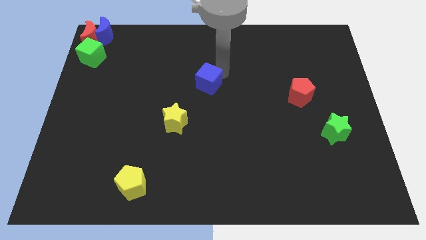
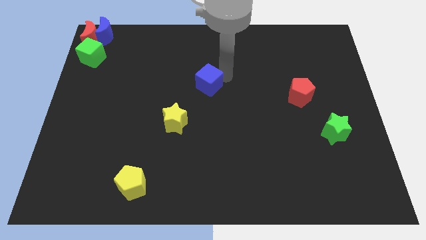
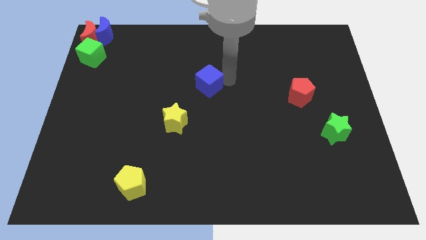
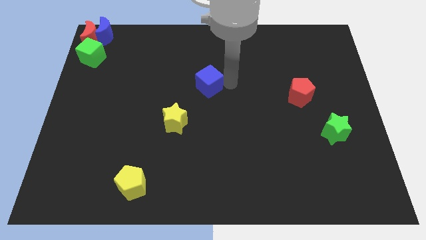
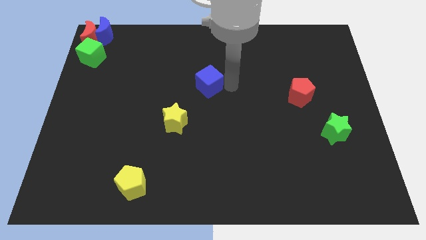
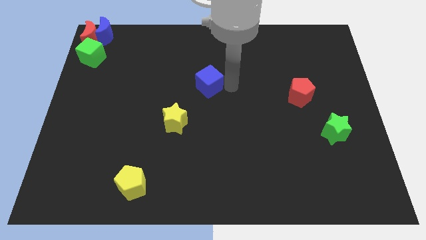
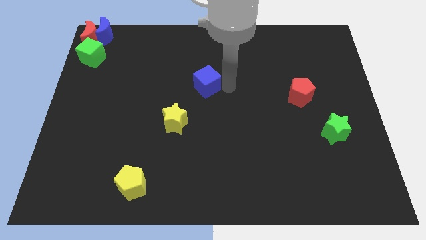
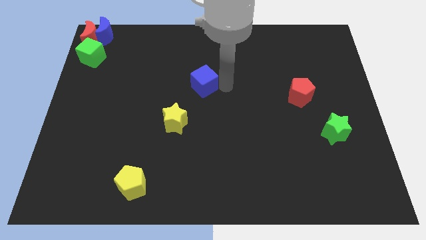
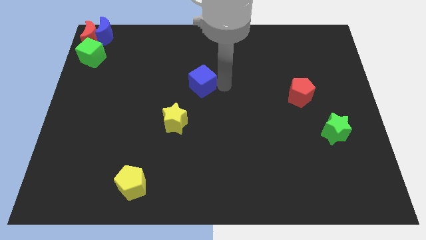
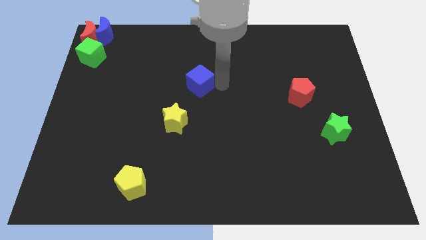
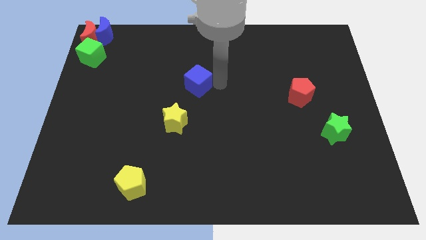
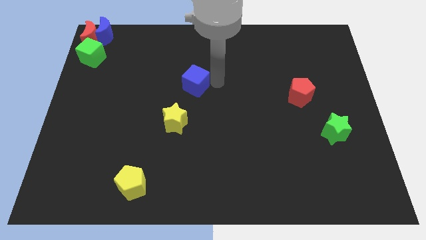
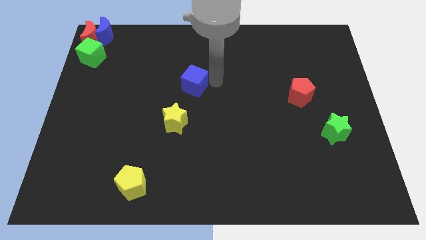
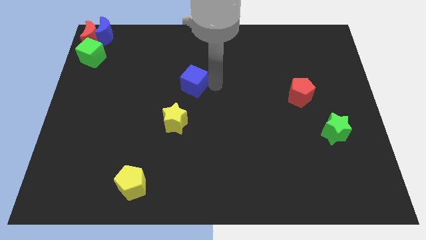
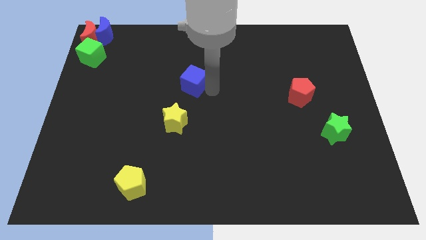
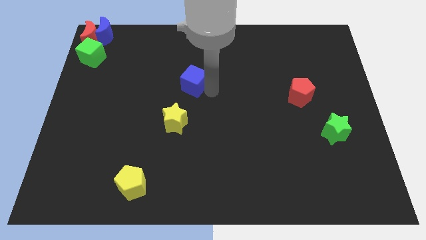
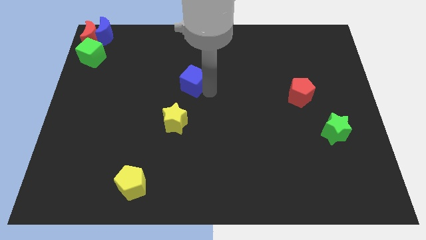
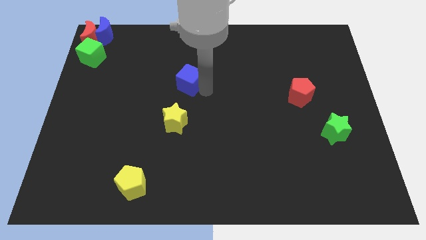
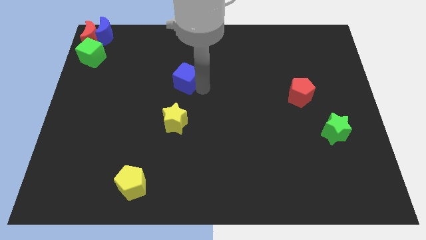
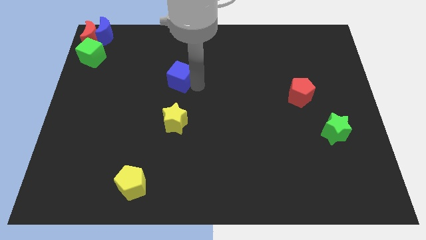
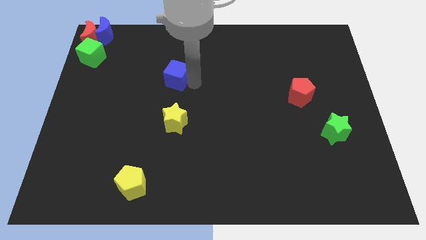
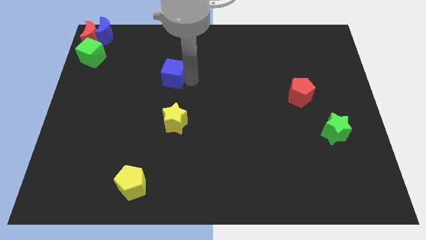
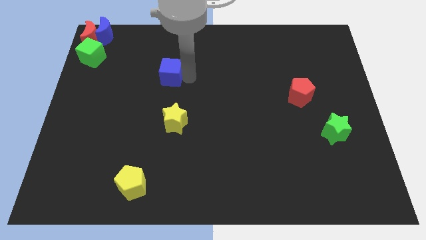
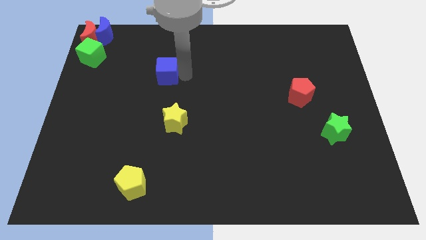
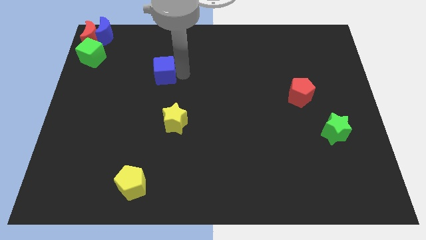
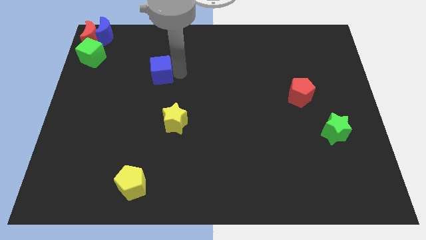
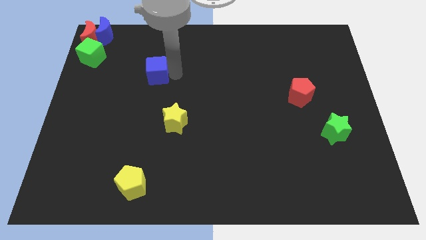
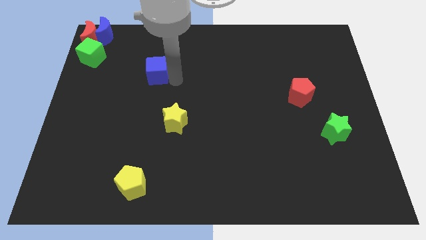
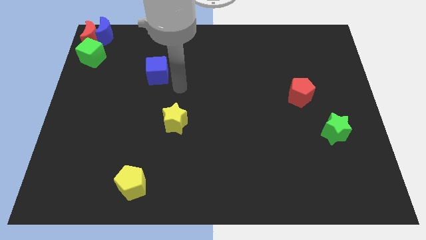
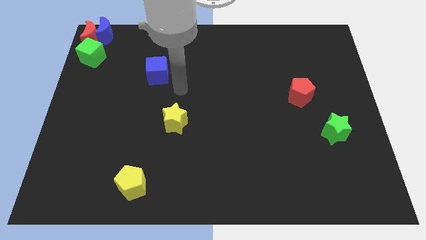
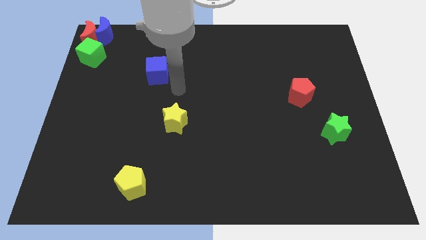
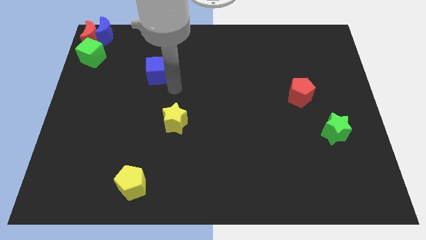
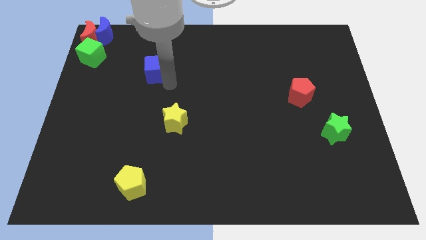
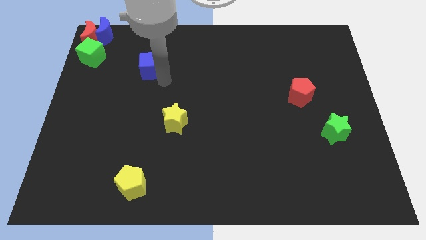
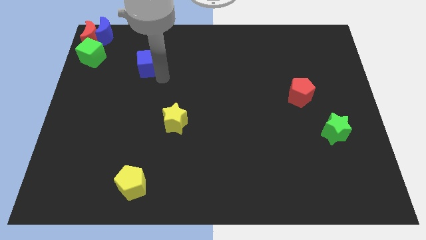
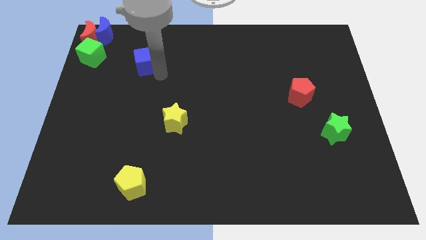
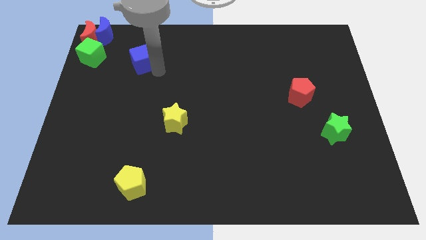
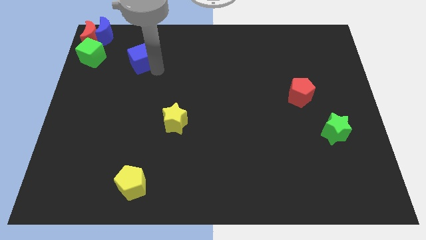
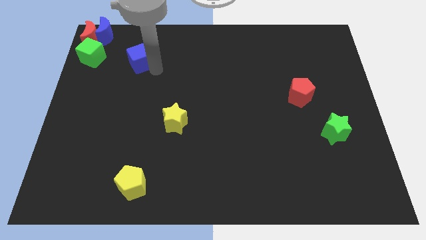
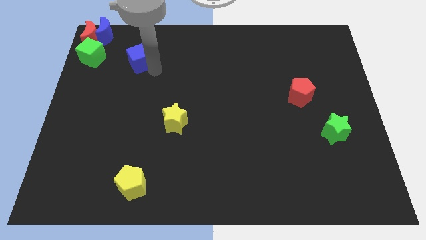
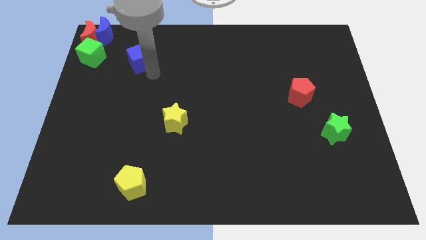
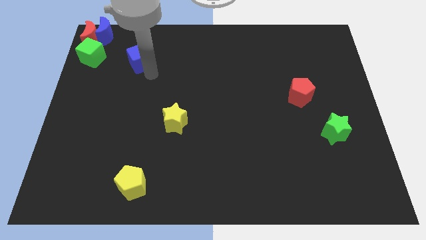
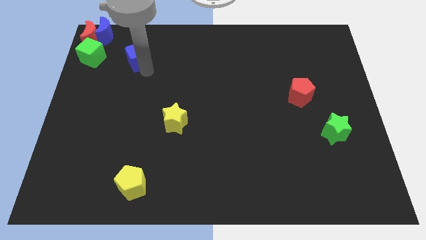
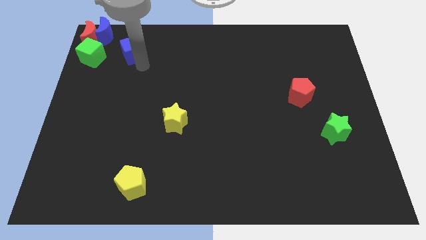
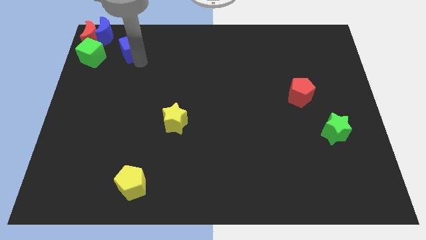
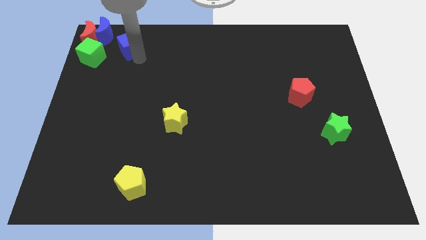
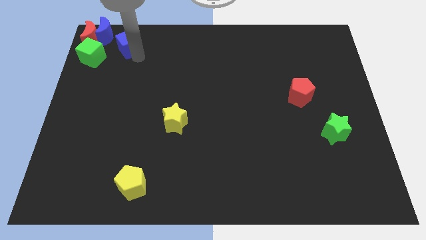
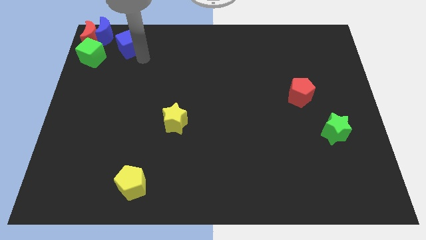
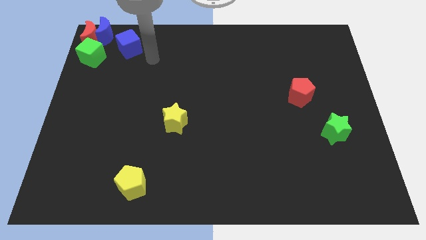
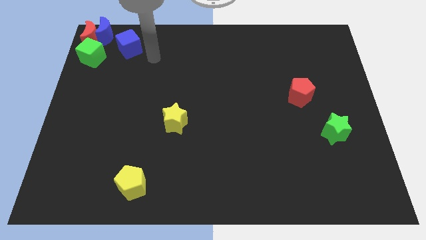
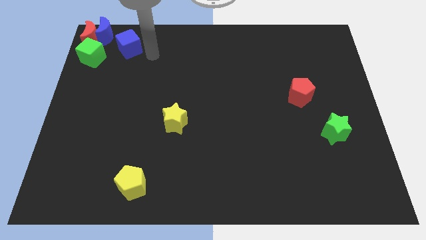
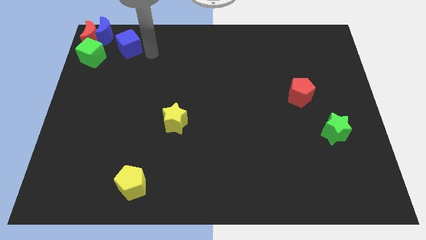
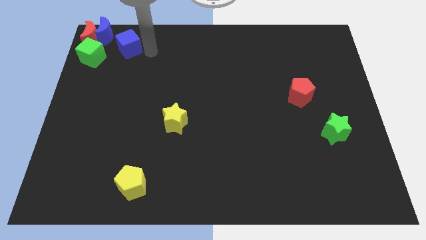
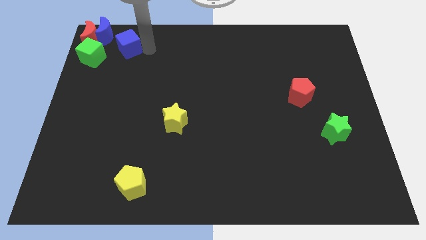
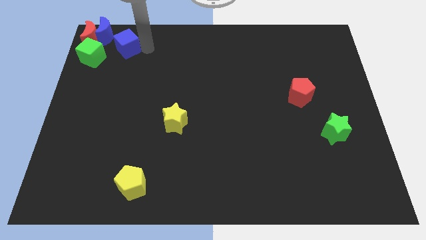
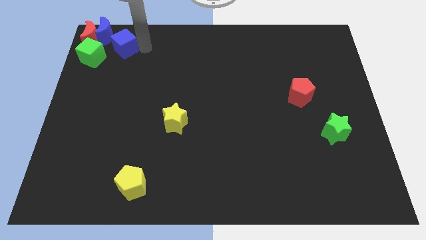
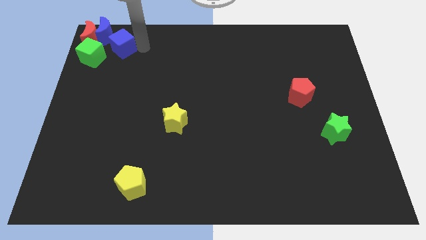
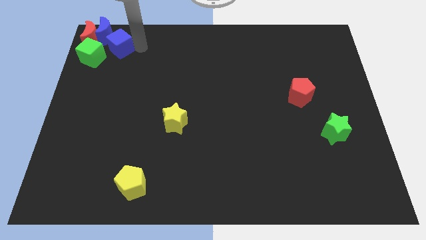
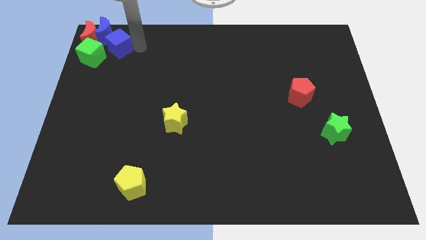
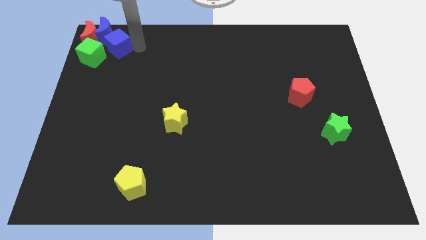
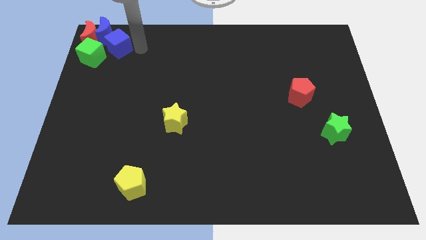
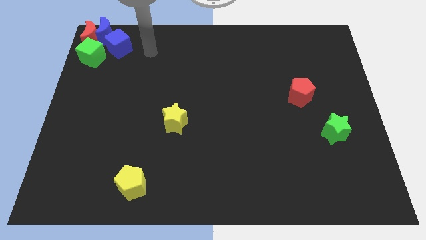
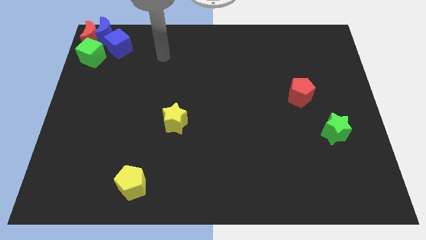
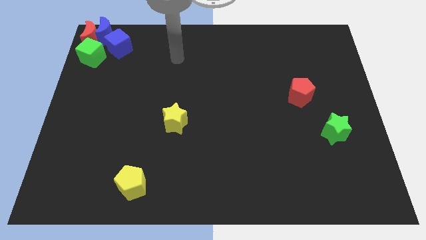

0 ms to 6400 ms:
move the blue cube close to the green cube

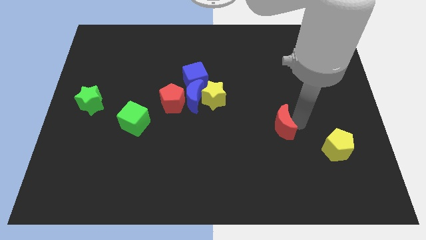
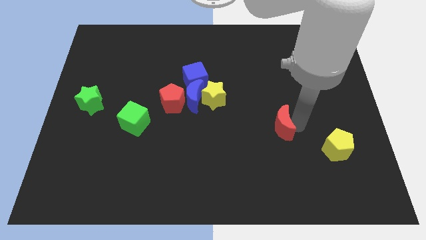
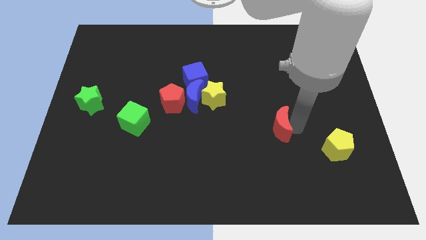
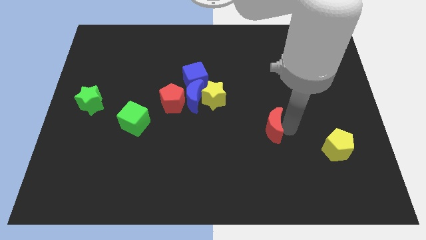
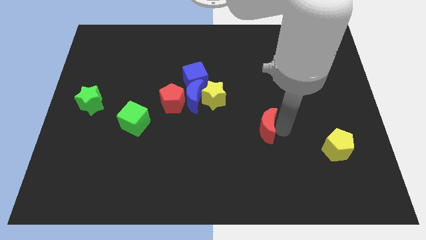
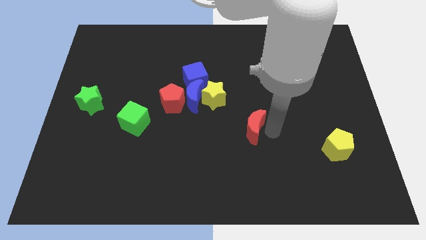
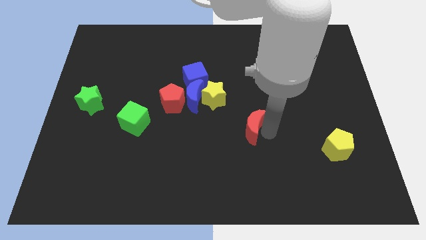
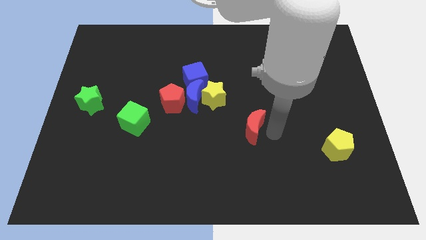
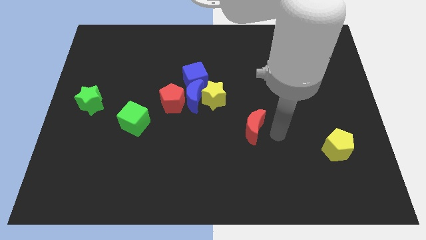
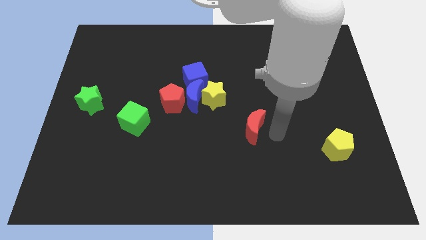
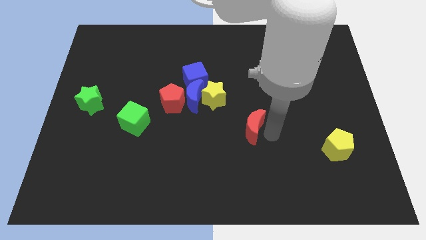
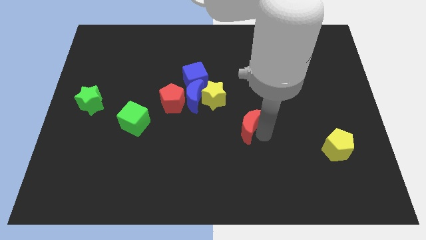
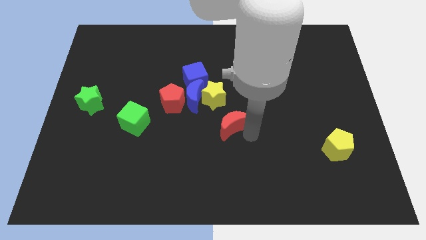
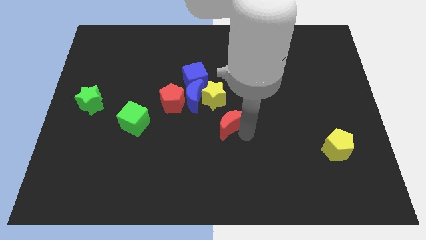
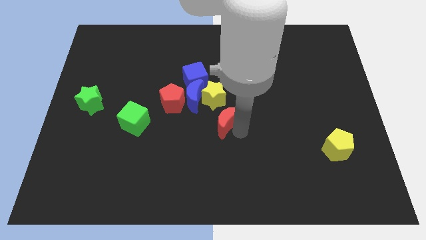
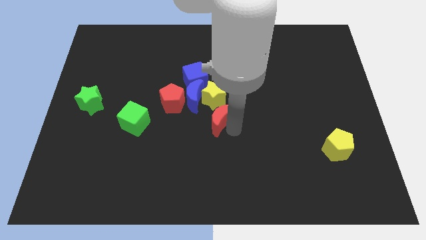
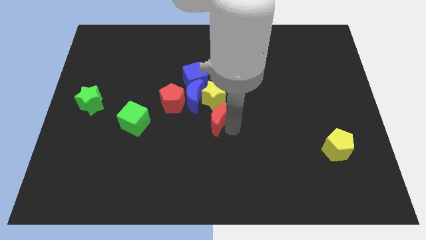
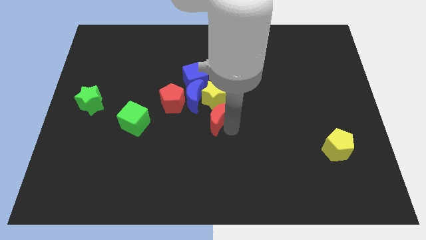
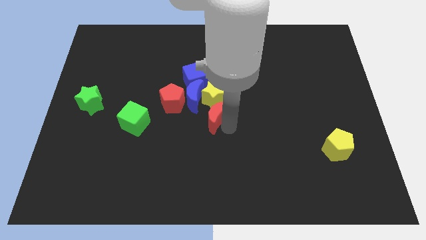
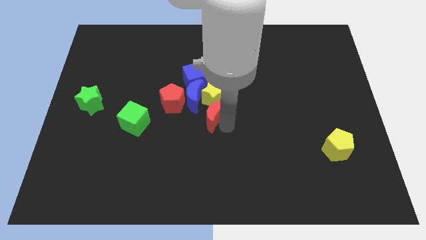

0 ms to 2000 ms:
push the red crescent to the bottom of the yellow star

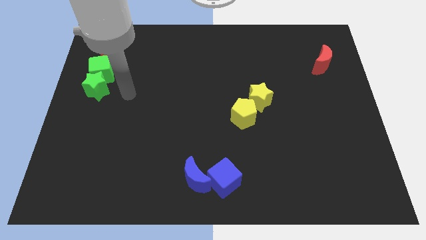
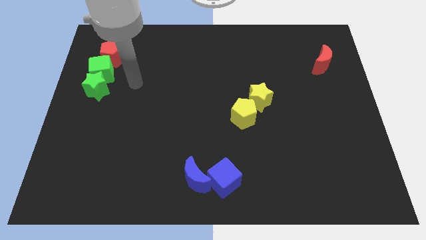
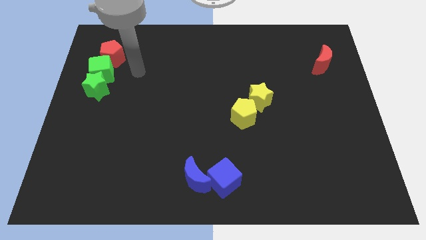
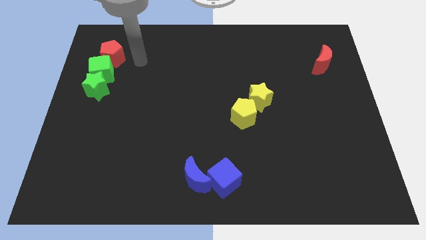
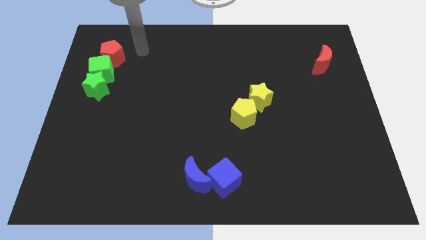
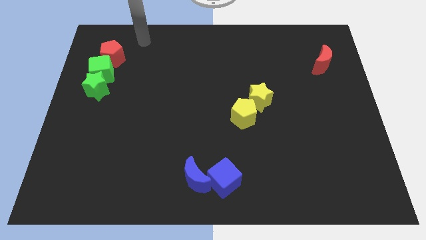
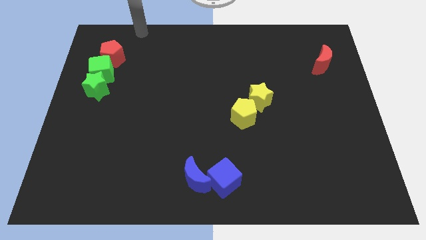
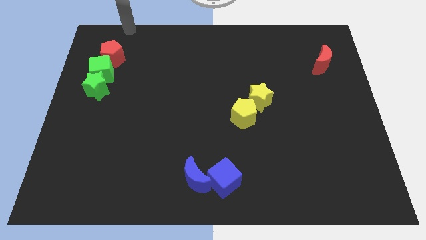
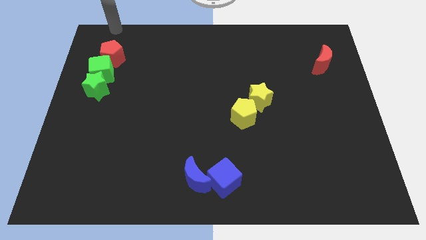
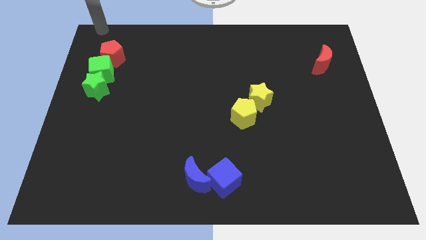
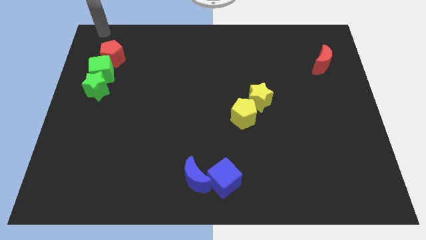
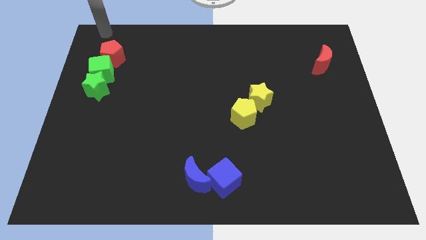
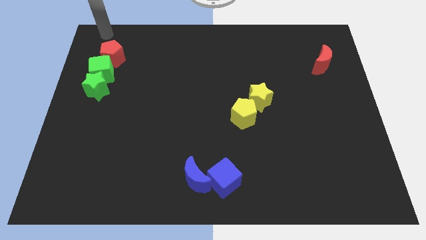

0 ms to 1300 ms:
place your hand above the red pentagon
